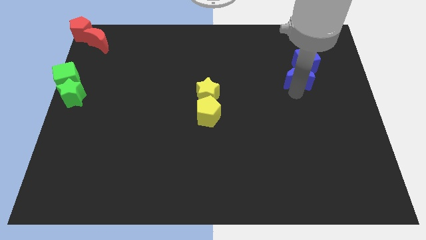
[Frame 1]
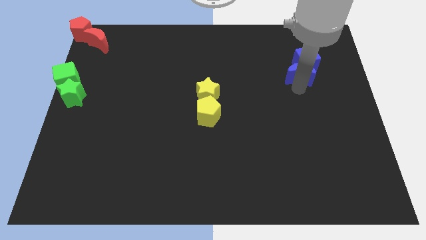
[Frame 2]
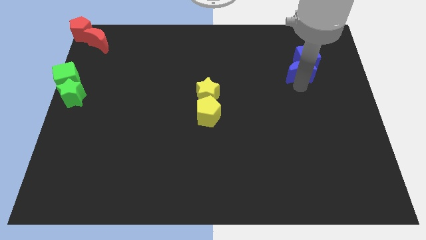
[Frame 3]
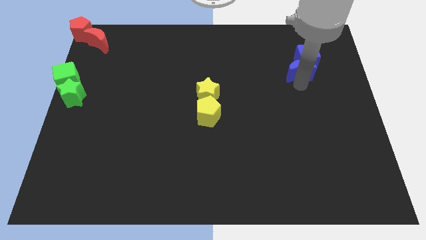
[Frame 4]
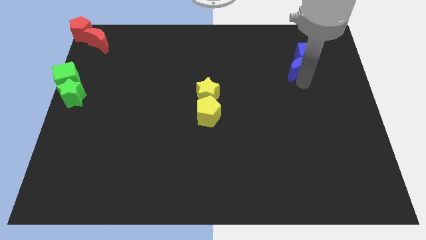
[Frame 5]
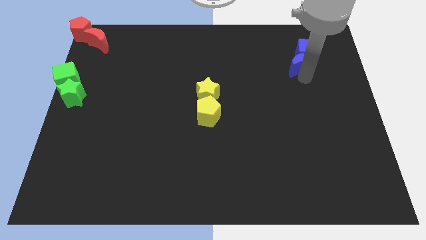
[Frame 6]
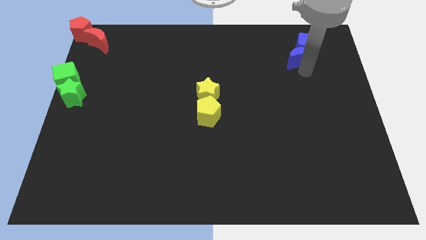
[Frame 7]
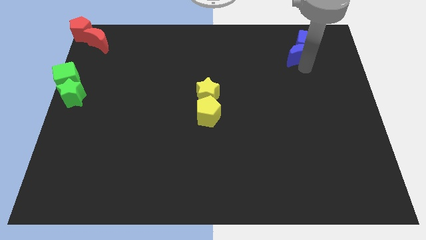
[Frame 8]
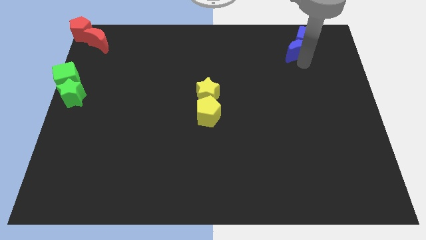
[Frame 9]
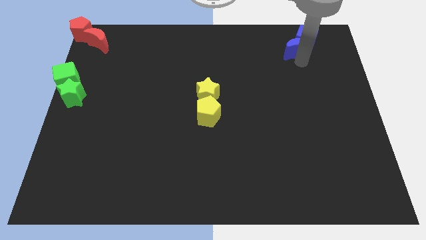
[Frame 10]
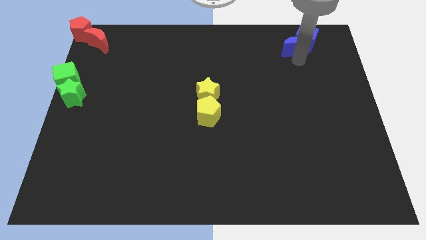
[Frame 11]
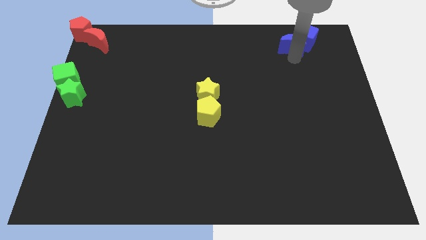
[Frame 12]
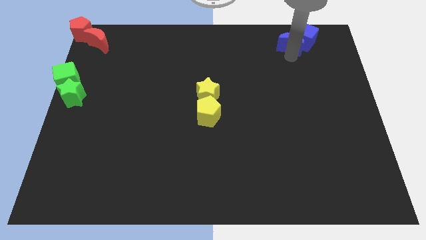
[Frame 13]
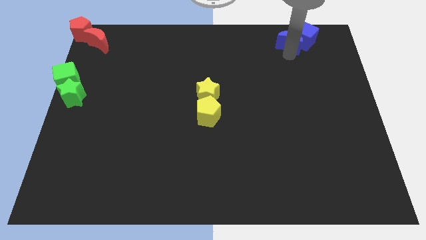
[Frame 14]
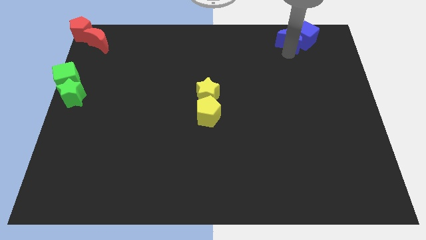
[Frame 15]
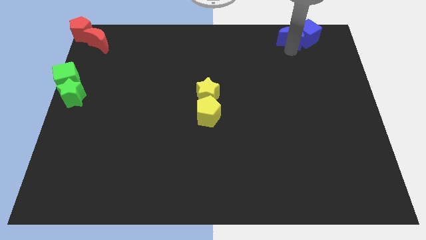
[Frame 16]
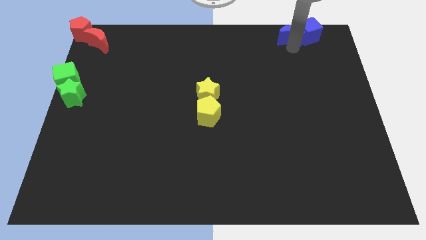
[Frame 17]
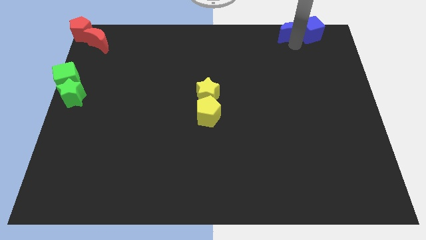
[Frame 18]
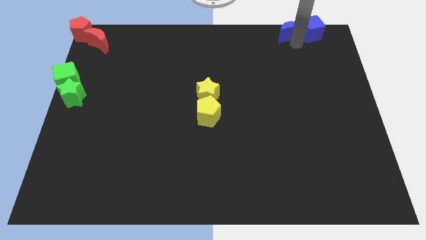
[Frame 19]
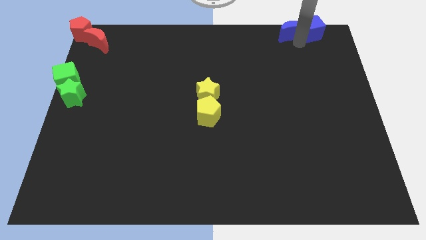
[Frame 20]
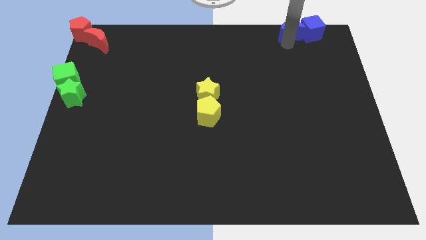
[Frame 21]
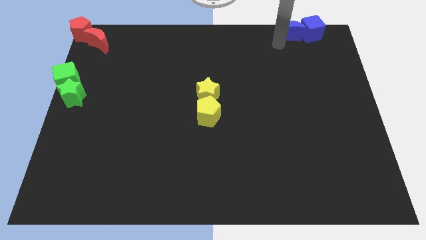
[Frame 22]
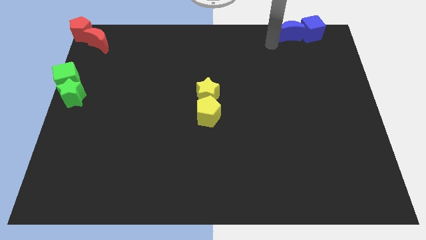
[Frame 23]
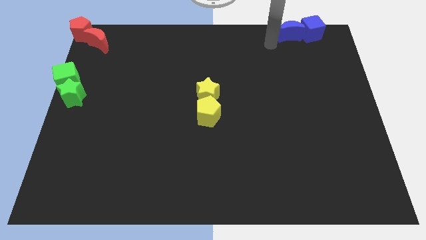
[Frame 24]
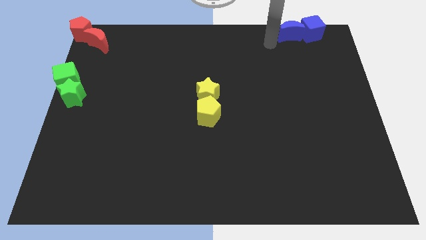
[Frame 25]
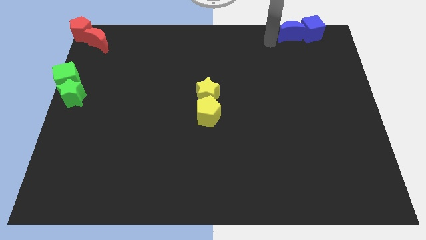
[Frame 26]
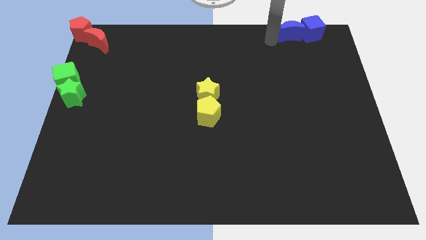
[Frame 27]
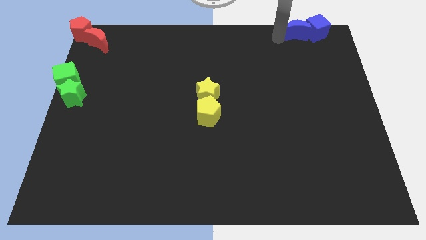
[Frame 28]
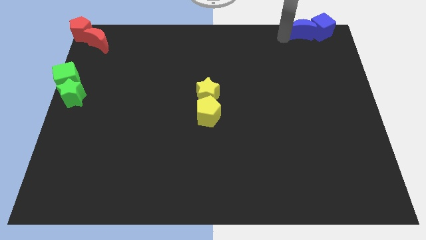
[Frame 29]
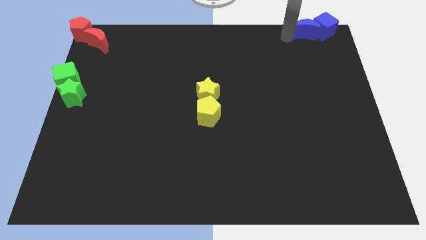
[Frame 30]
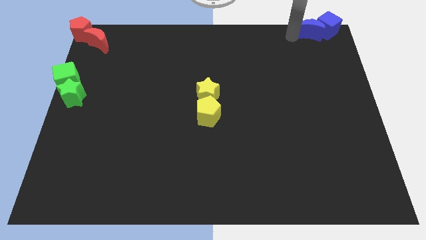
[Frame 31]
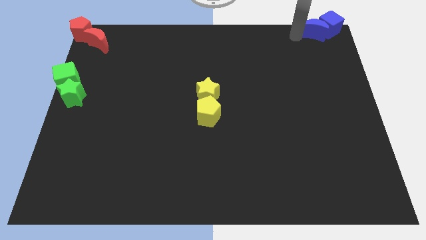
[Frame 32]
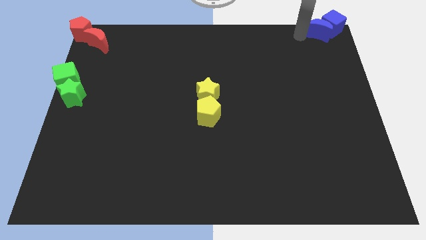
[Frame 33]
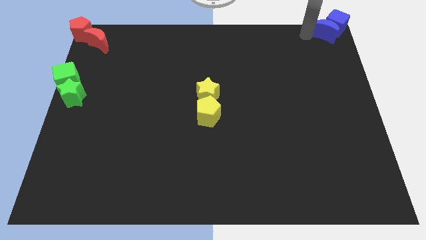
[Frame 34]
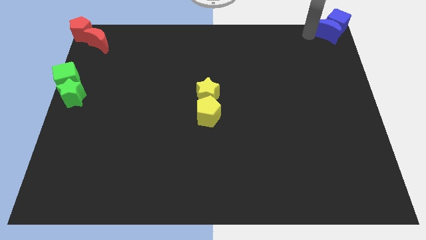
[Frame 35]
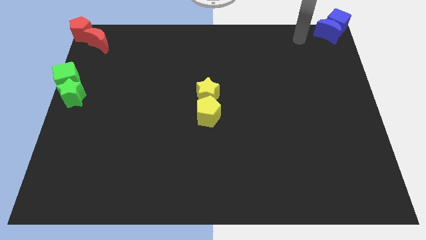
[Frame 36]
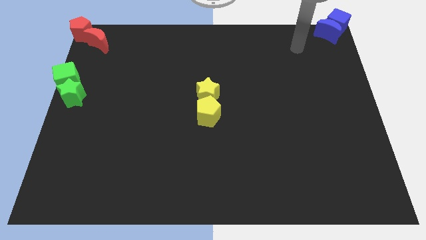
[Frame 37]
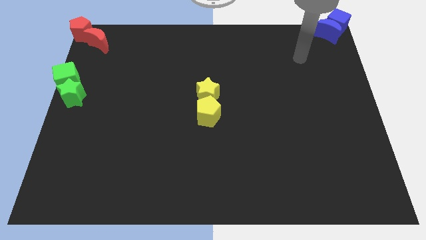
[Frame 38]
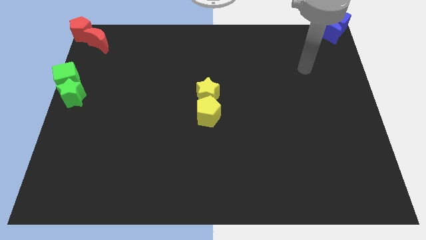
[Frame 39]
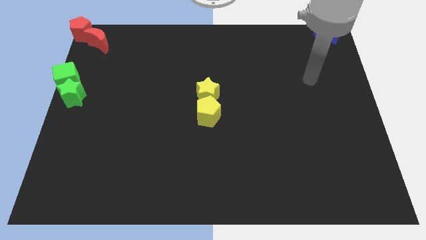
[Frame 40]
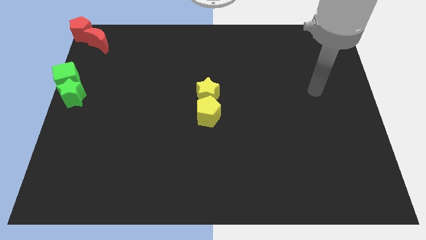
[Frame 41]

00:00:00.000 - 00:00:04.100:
push the blue crescent along with the blue cube to the top right of the board

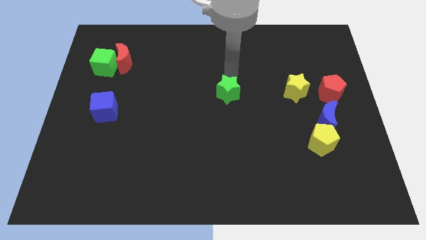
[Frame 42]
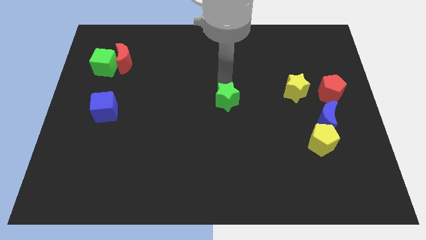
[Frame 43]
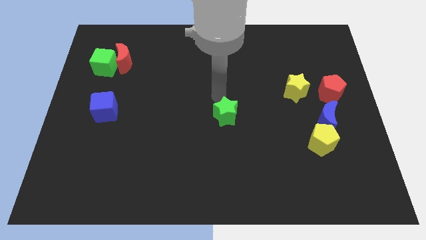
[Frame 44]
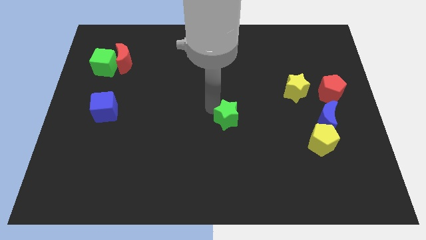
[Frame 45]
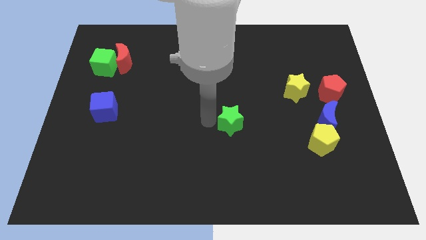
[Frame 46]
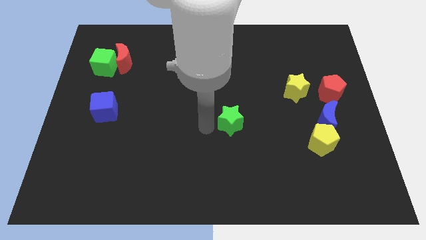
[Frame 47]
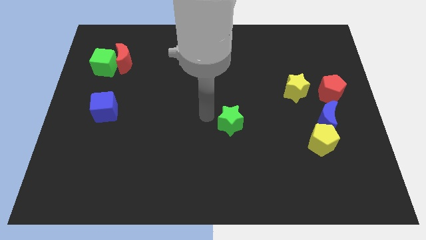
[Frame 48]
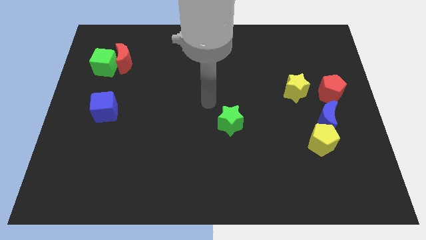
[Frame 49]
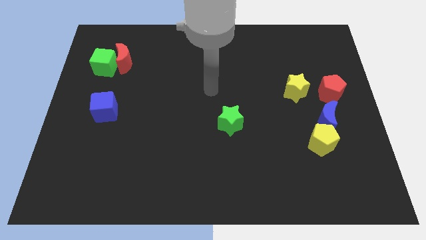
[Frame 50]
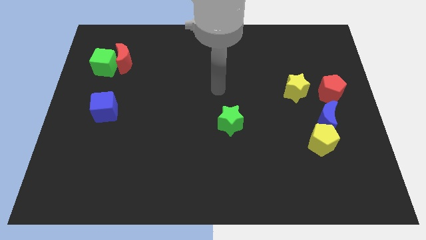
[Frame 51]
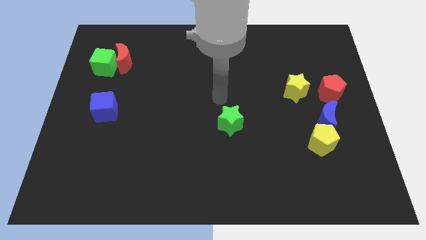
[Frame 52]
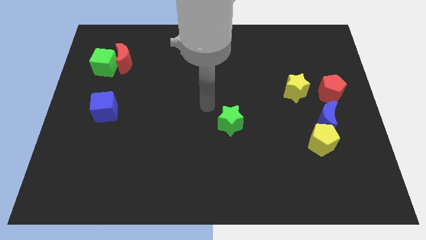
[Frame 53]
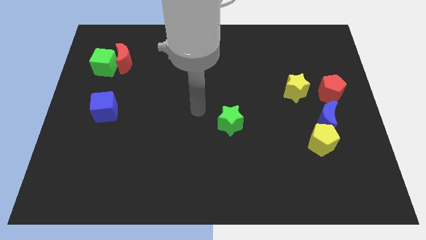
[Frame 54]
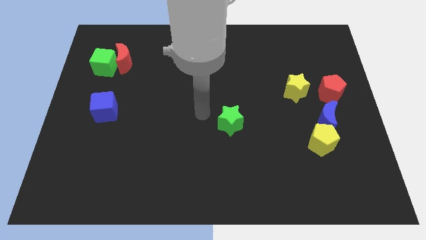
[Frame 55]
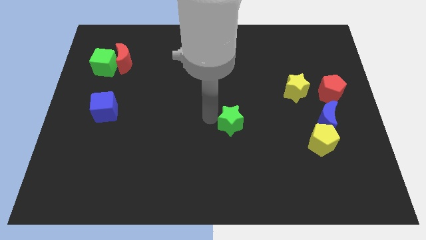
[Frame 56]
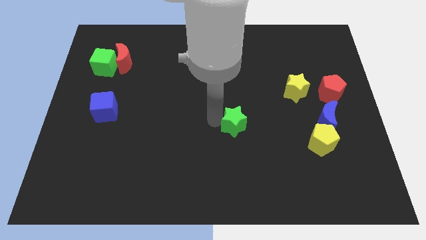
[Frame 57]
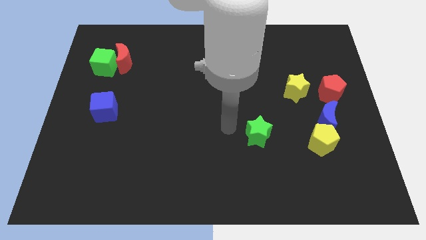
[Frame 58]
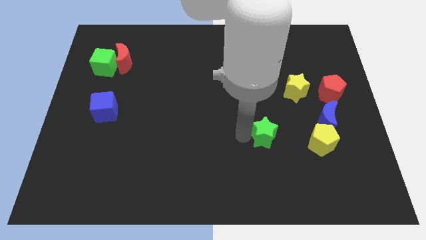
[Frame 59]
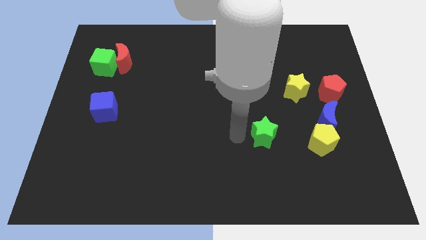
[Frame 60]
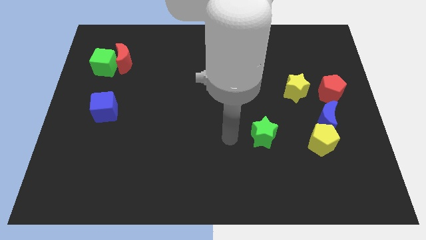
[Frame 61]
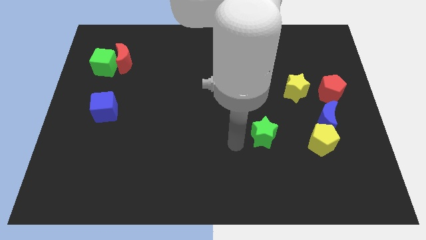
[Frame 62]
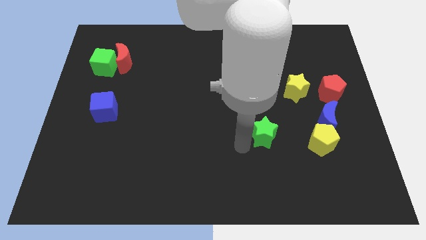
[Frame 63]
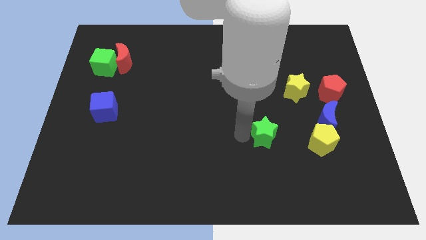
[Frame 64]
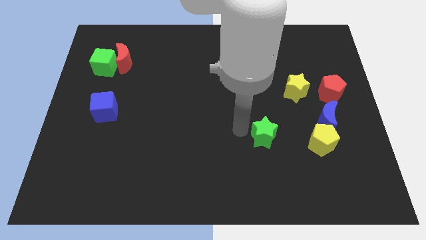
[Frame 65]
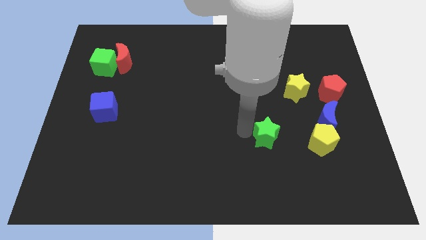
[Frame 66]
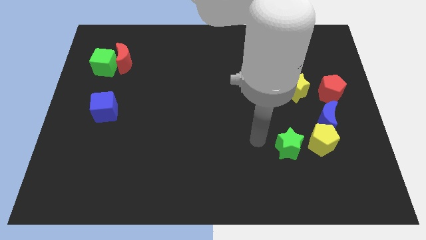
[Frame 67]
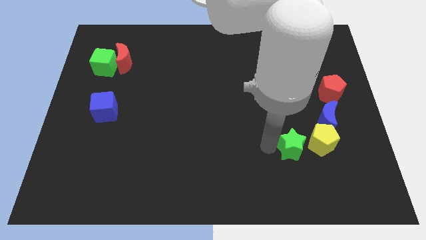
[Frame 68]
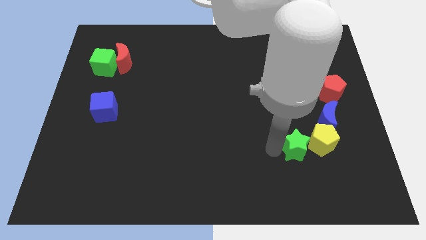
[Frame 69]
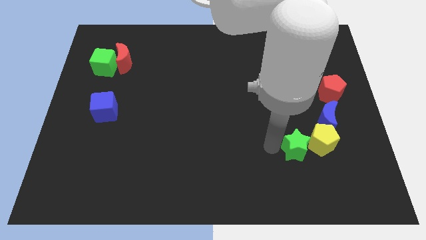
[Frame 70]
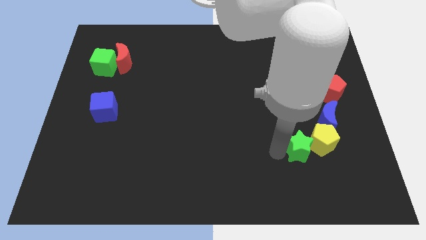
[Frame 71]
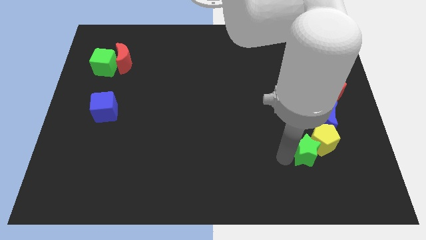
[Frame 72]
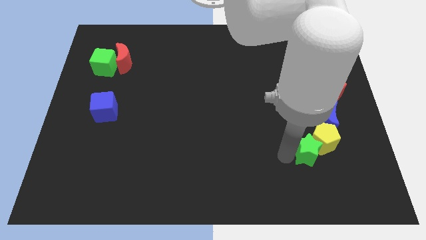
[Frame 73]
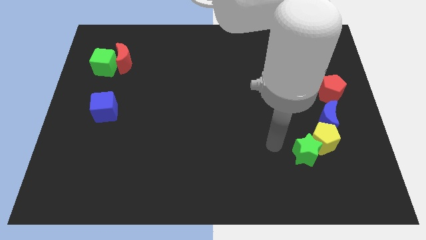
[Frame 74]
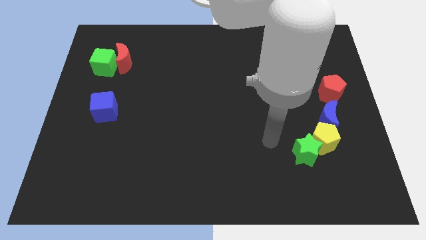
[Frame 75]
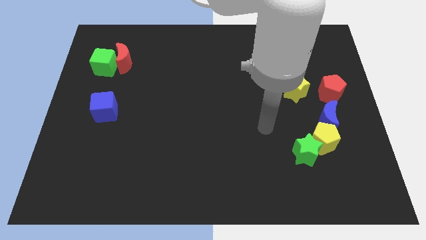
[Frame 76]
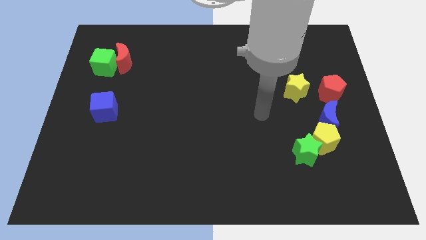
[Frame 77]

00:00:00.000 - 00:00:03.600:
move green star towards the yellow pentagon

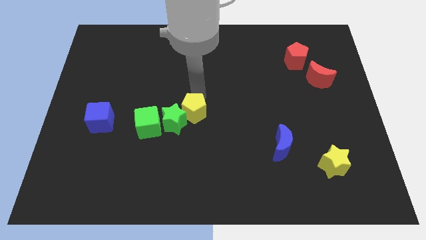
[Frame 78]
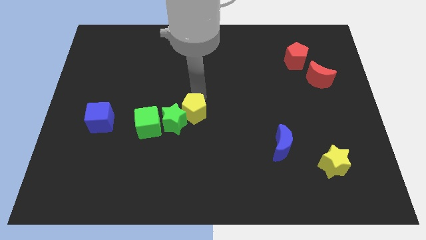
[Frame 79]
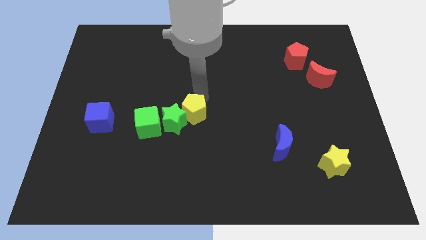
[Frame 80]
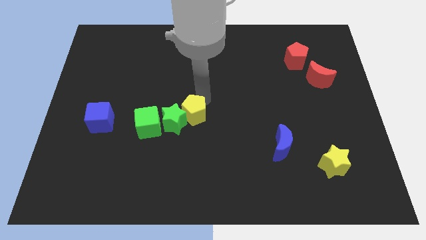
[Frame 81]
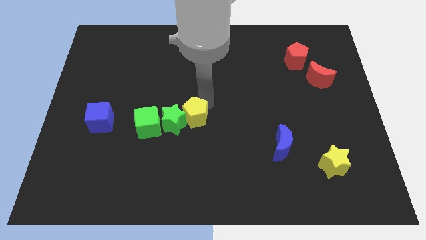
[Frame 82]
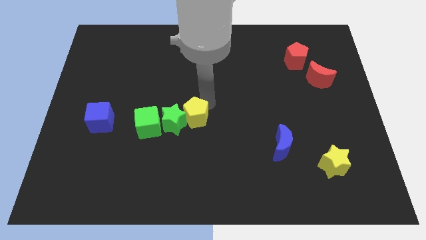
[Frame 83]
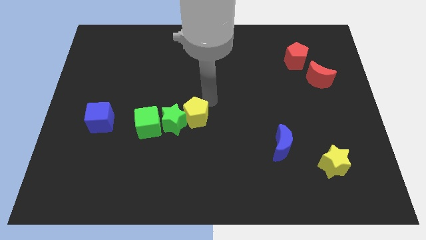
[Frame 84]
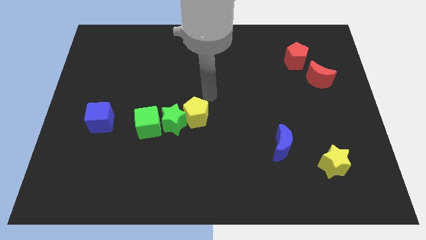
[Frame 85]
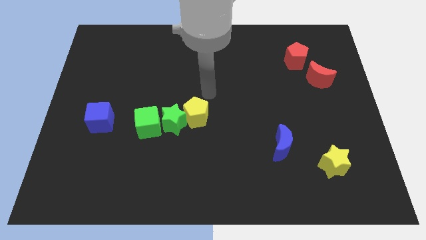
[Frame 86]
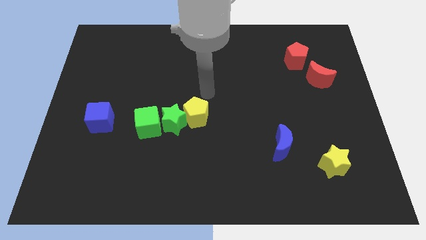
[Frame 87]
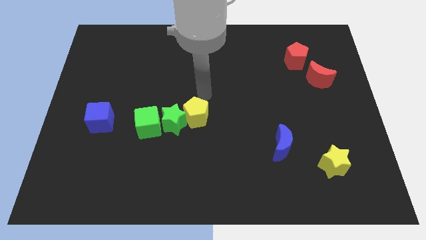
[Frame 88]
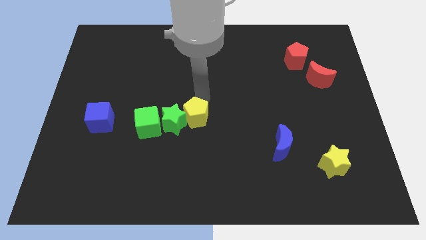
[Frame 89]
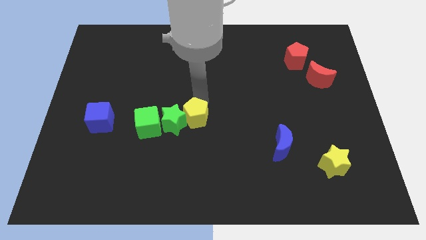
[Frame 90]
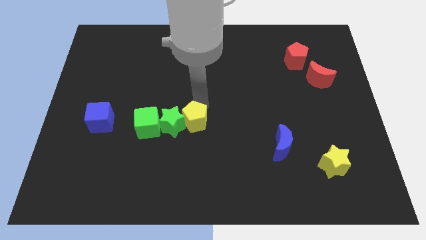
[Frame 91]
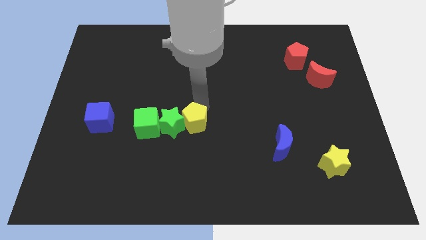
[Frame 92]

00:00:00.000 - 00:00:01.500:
push the yellow pentagon right to the green star
